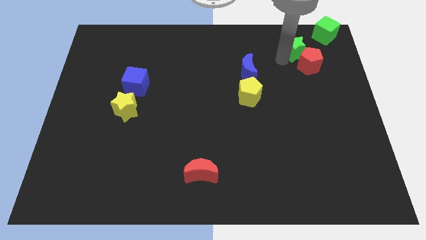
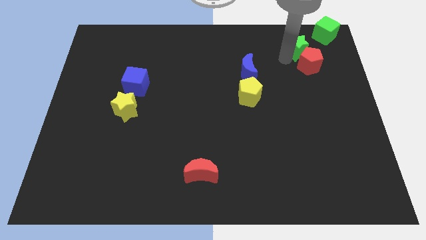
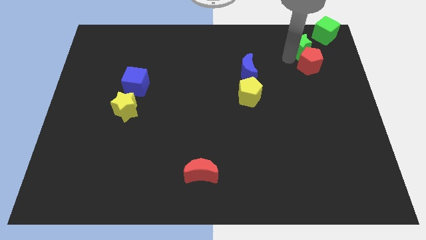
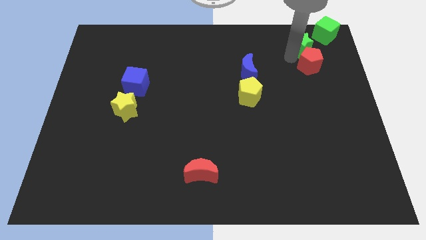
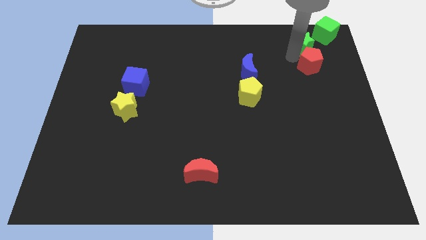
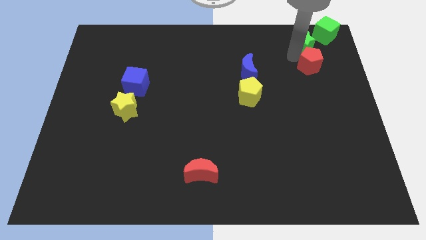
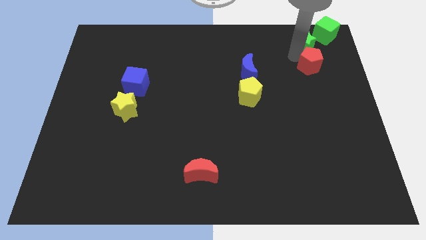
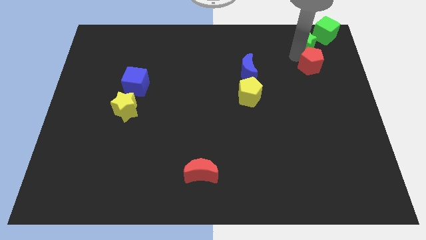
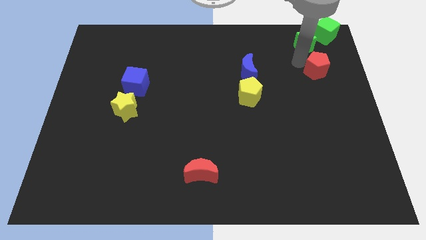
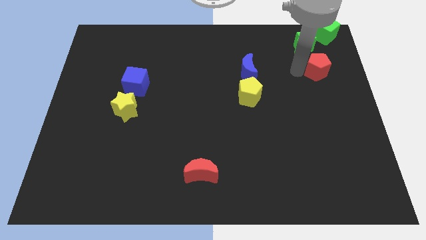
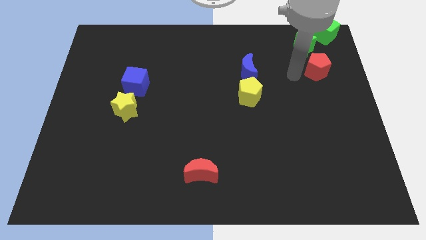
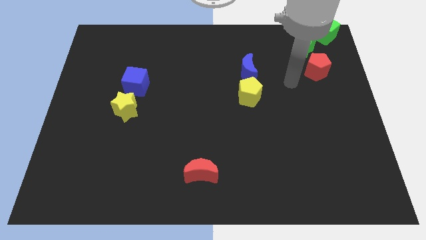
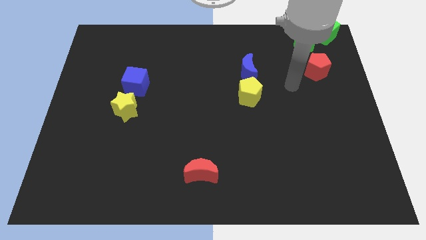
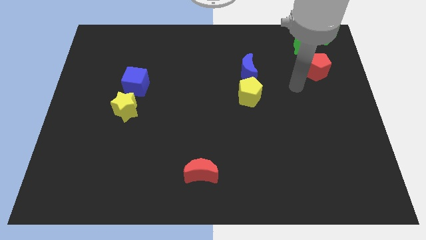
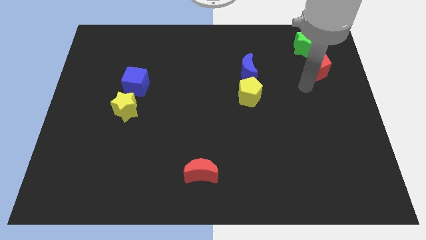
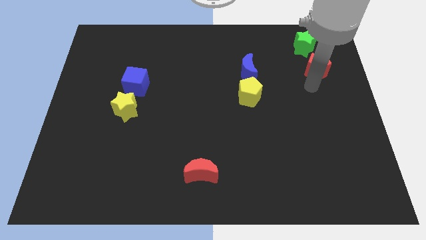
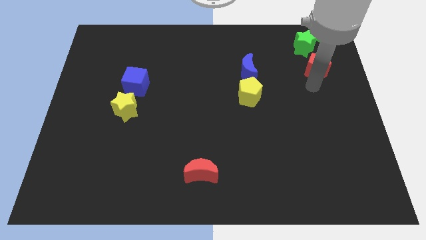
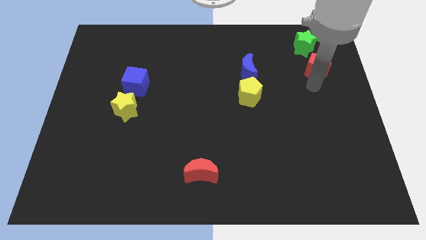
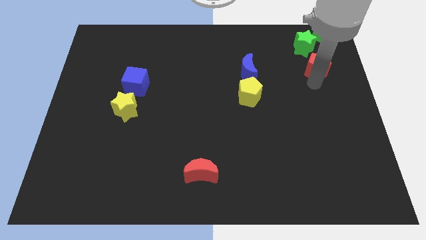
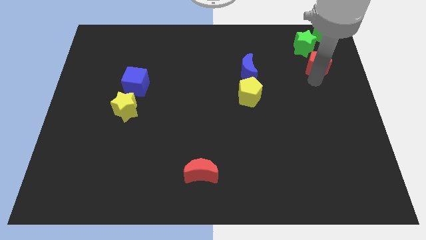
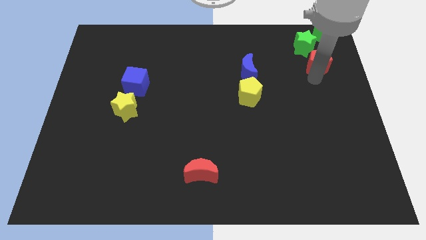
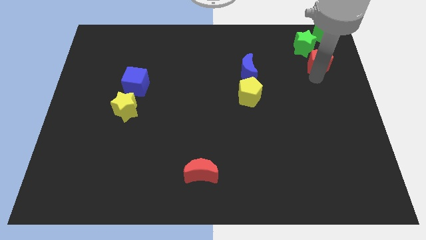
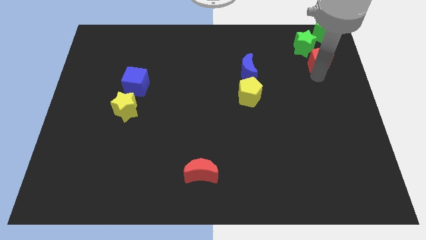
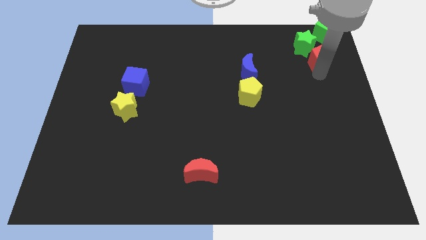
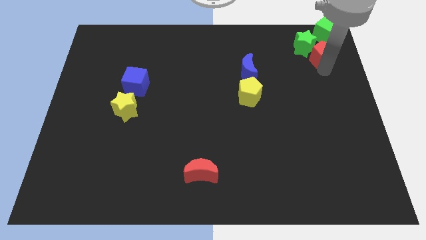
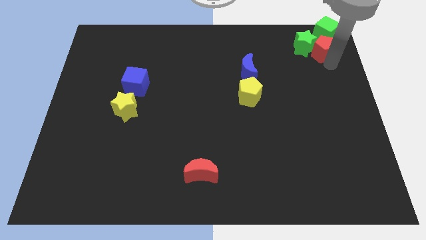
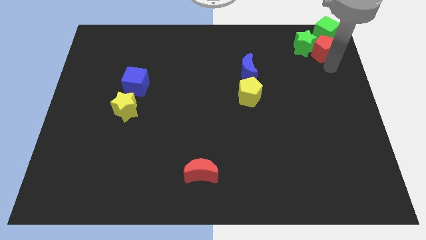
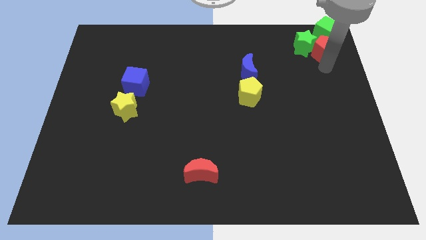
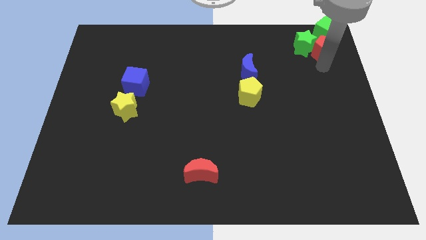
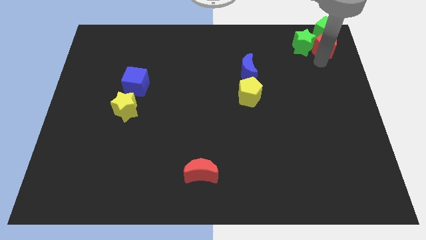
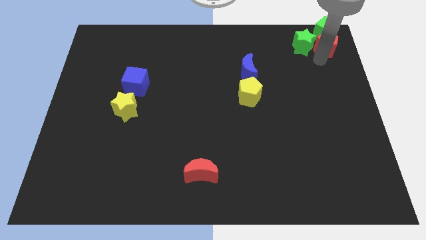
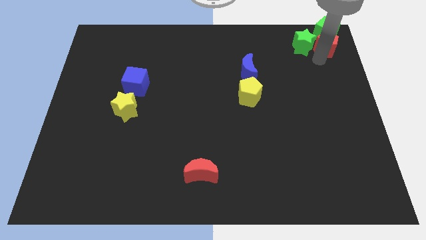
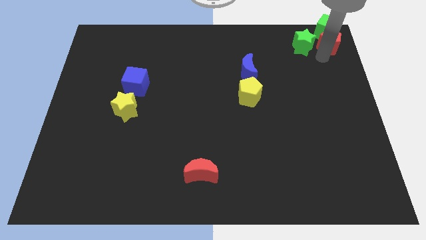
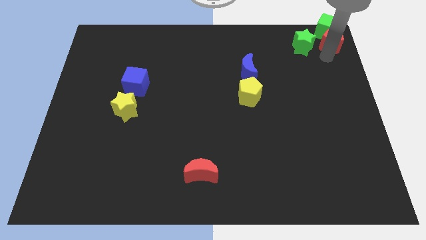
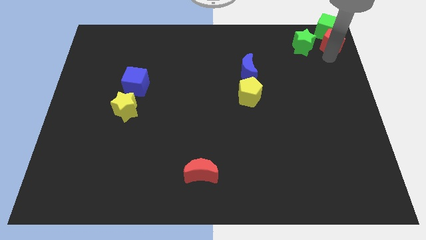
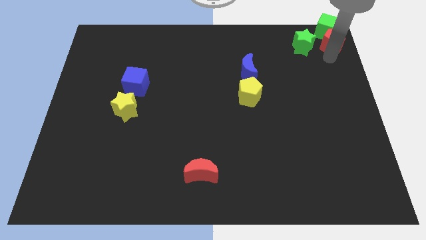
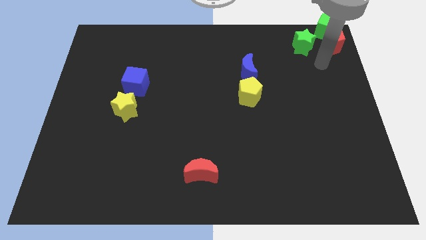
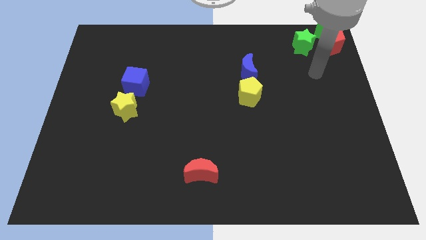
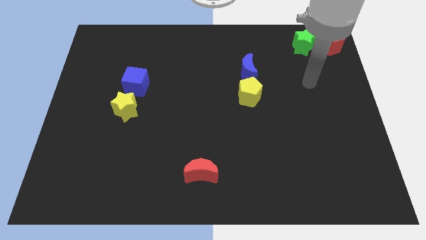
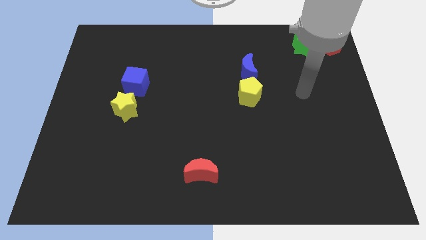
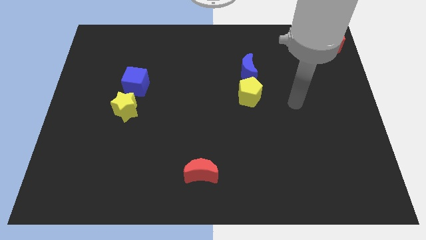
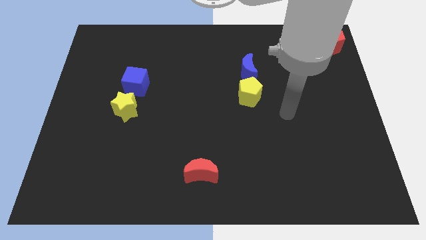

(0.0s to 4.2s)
slide green star and red pentagon together to the top right

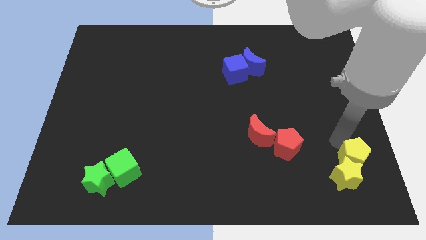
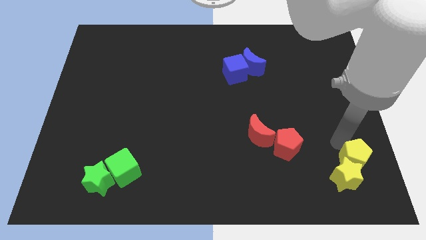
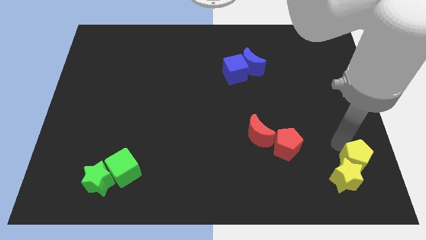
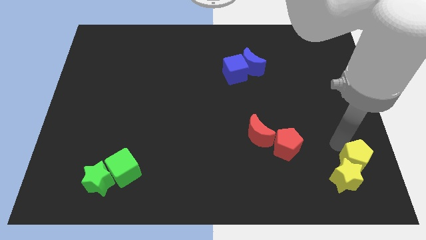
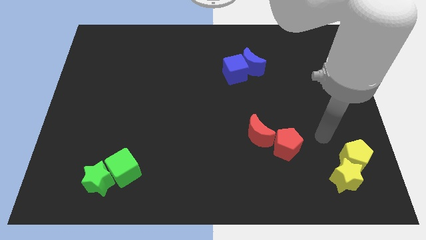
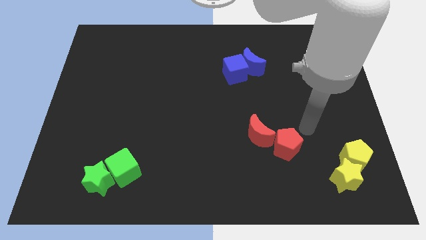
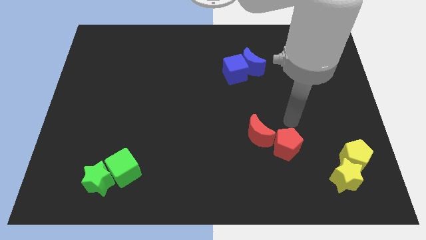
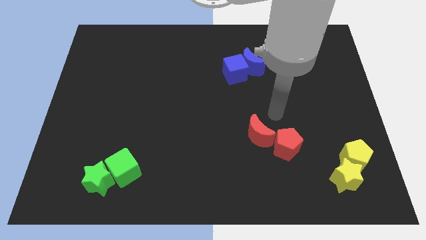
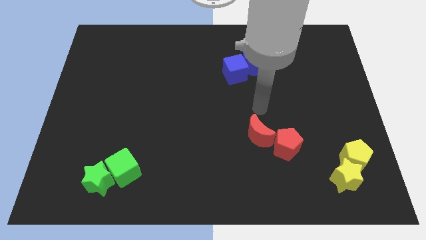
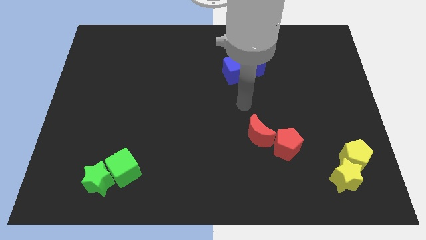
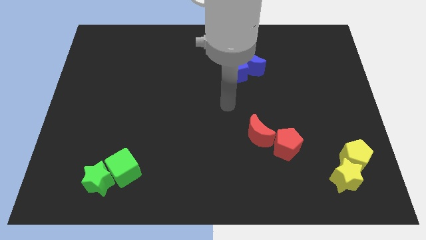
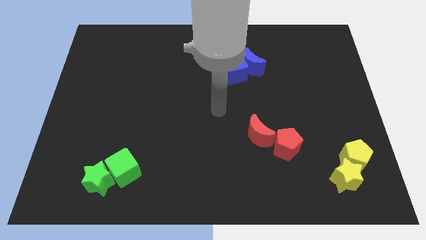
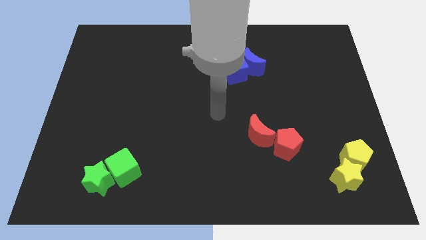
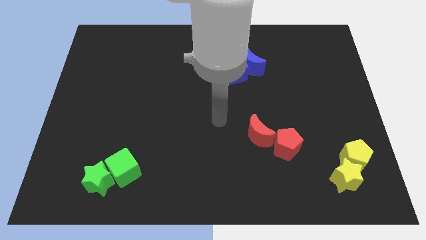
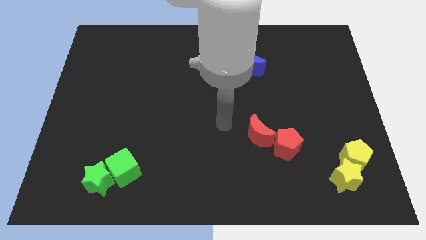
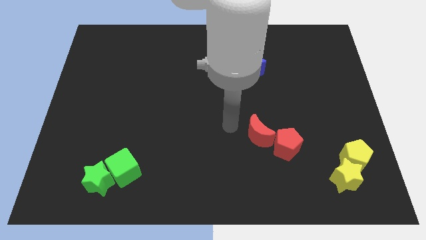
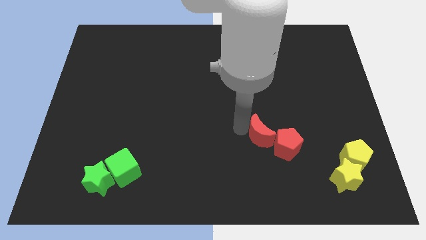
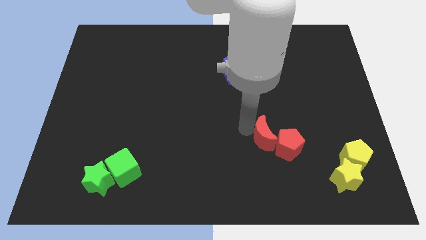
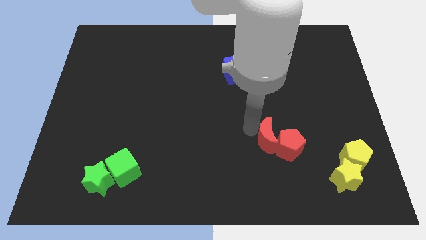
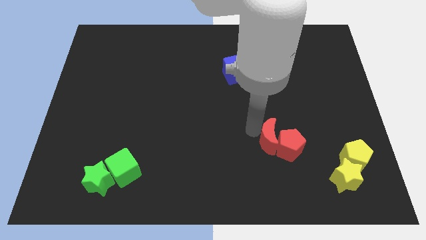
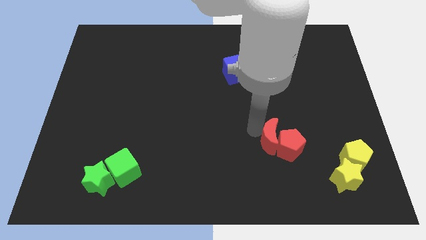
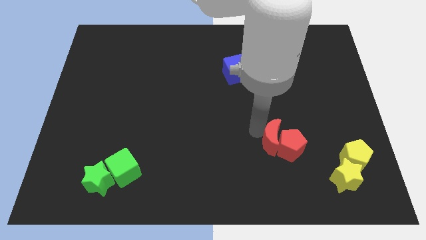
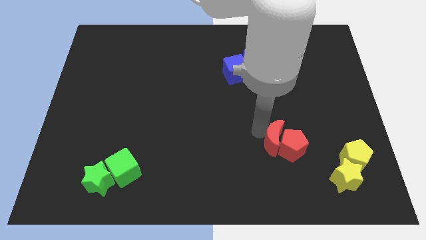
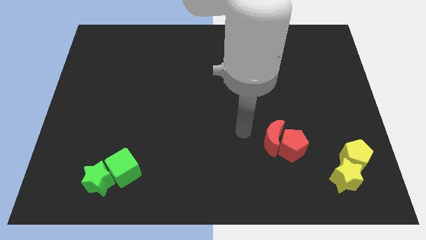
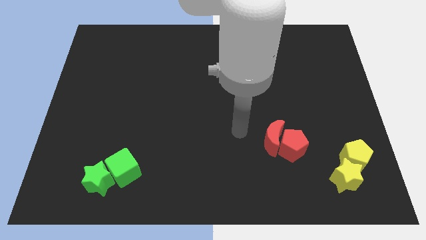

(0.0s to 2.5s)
push the red blocks slightly to the bottom

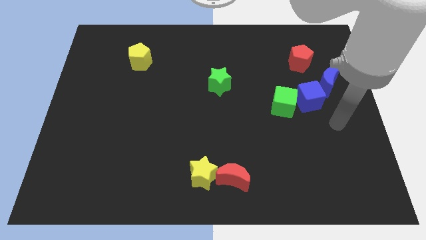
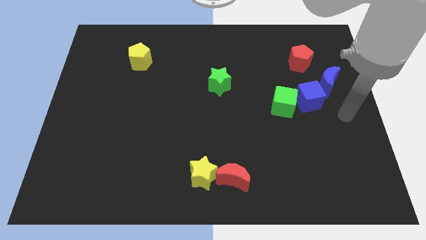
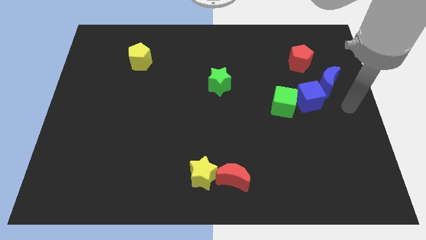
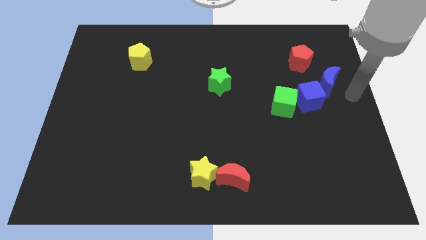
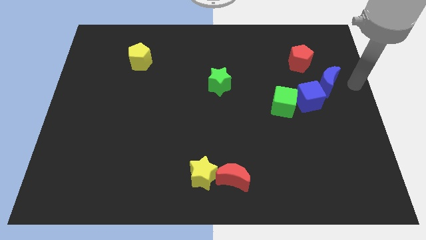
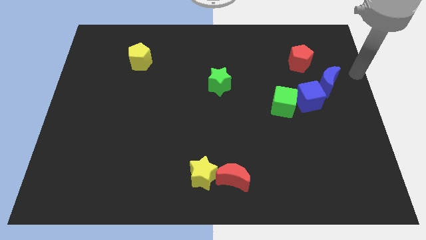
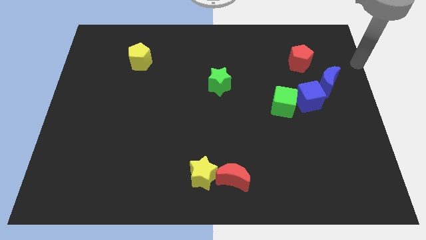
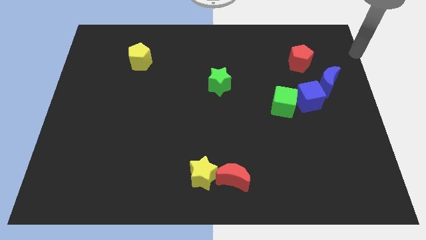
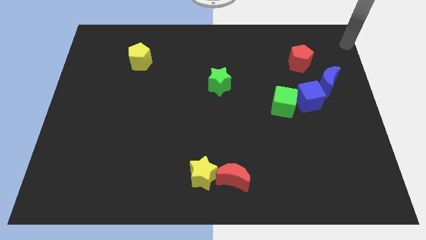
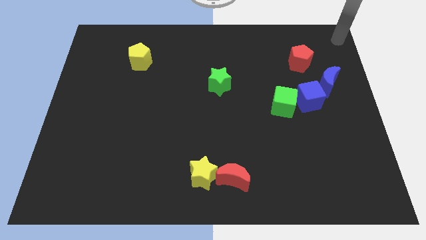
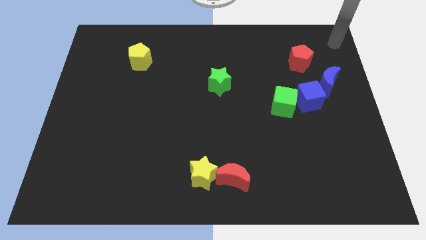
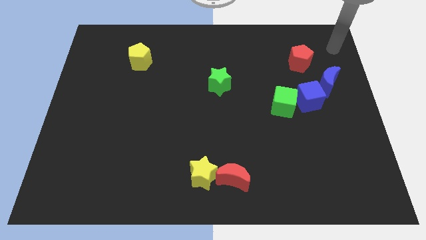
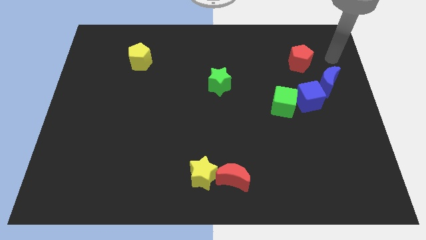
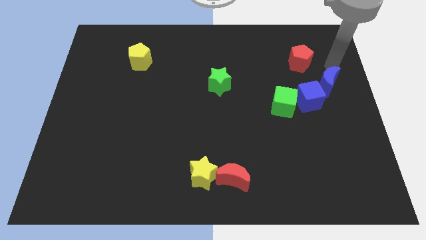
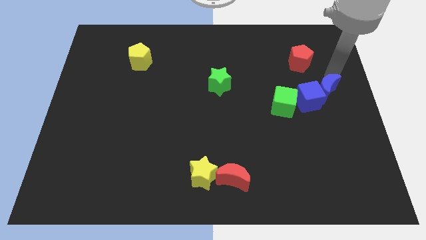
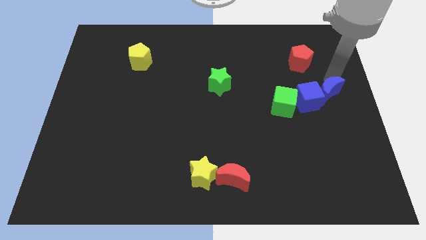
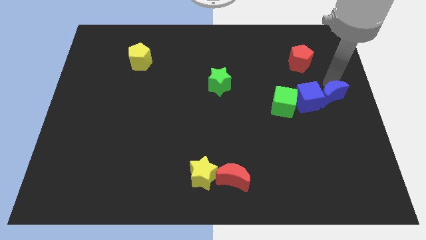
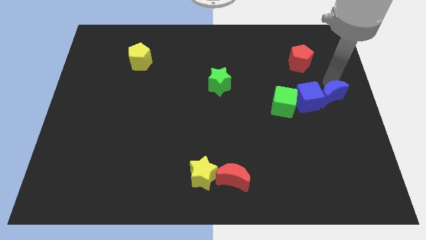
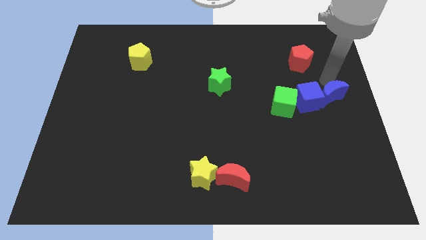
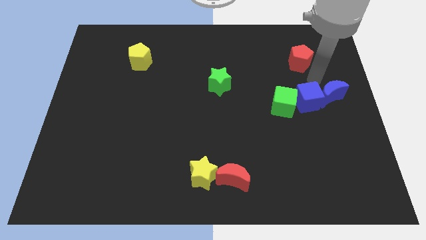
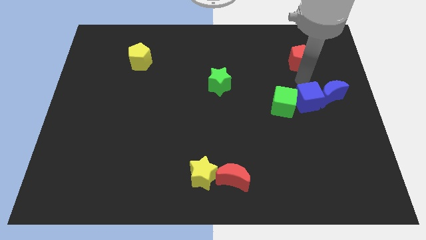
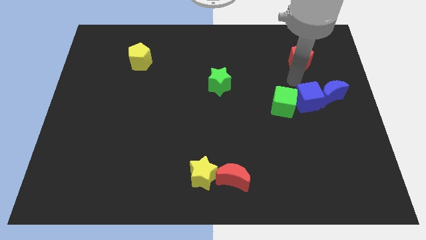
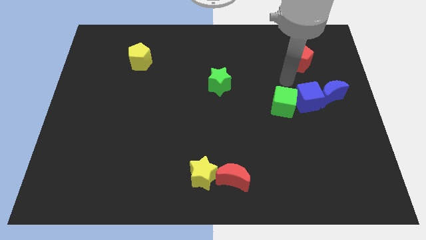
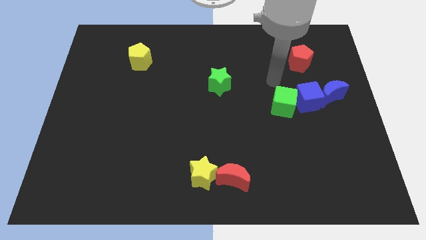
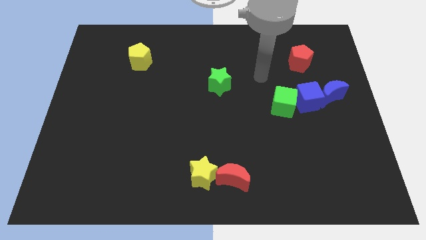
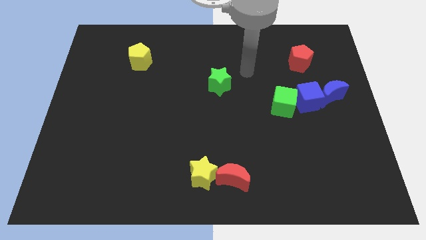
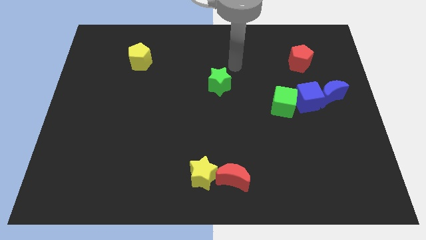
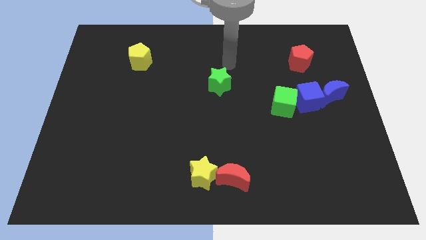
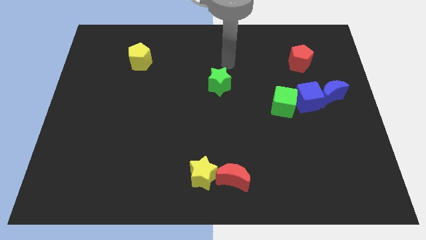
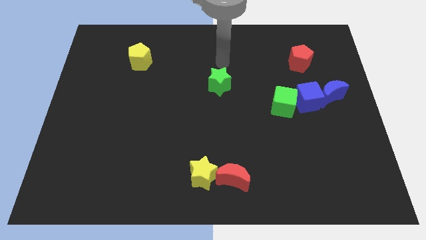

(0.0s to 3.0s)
move the blue crescent down slightly
